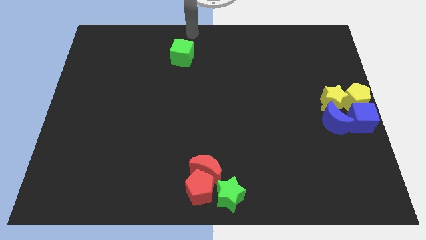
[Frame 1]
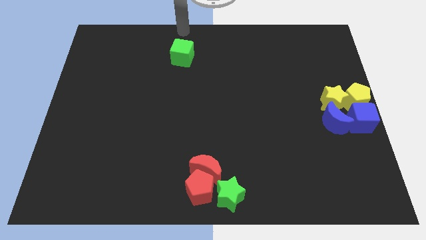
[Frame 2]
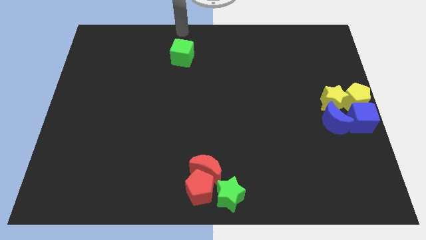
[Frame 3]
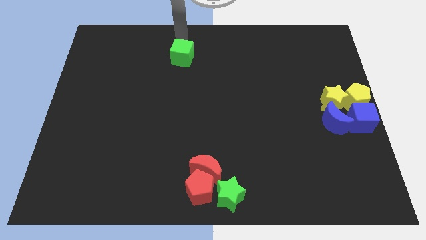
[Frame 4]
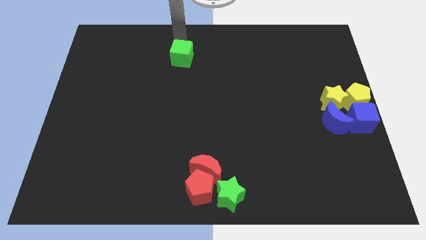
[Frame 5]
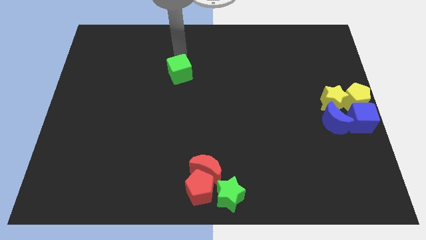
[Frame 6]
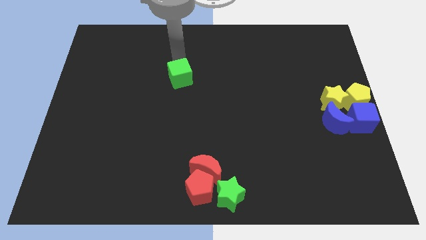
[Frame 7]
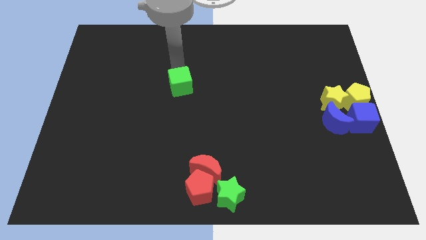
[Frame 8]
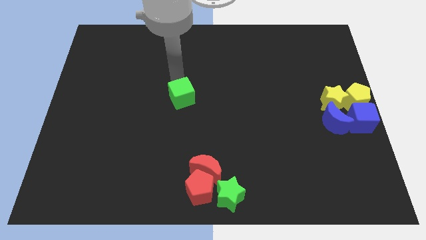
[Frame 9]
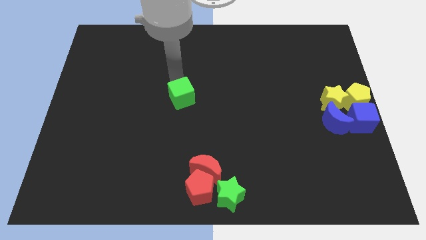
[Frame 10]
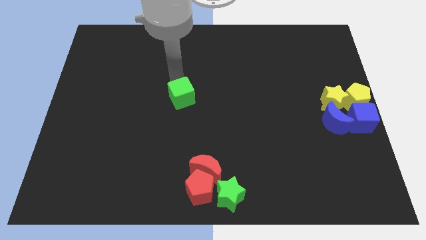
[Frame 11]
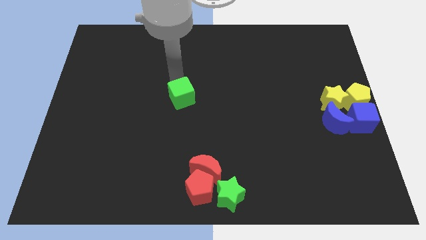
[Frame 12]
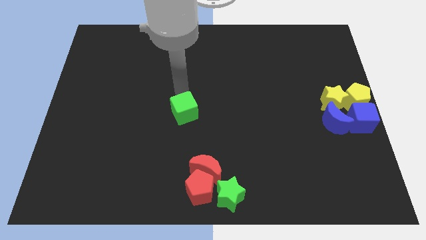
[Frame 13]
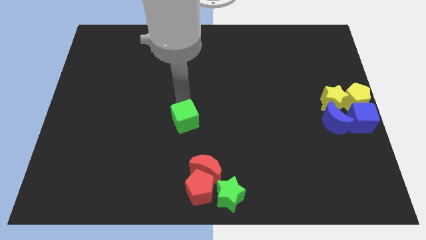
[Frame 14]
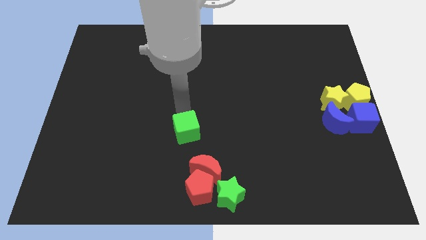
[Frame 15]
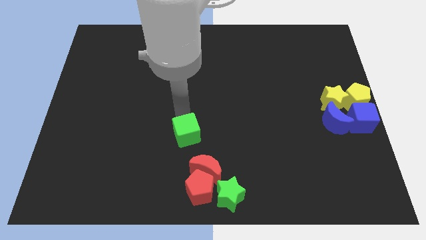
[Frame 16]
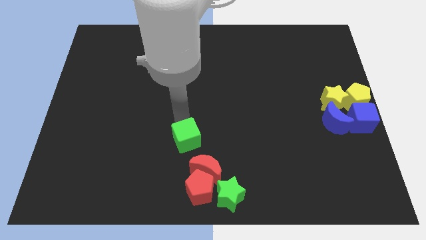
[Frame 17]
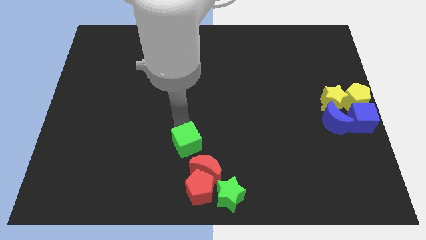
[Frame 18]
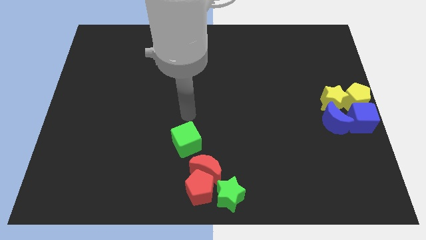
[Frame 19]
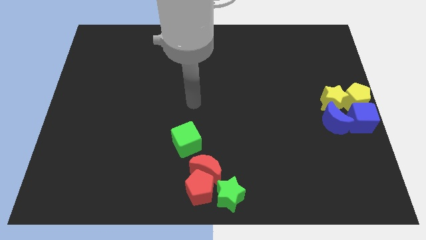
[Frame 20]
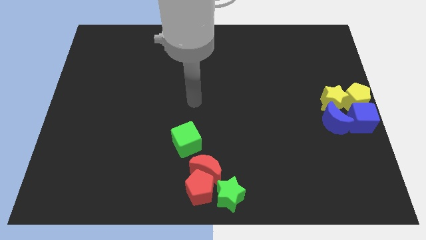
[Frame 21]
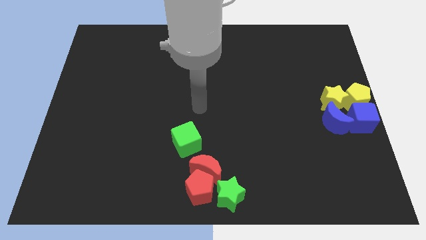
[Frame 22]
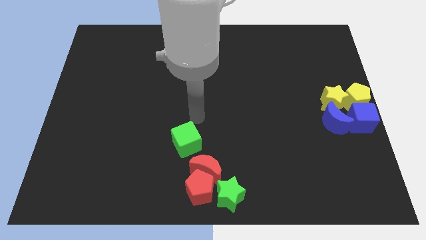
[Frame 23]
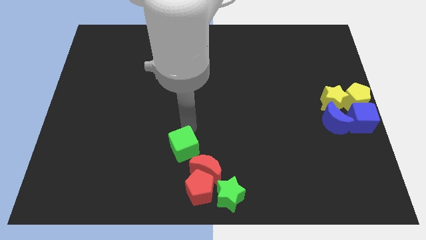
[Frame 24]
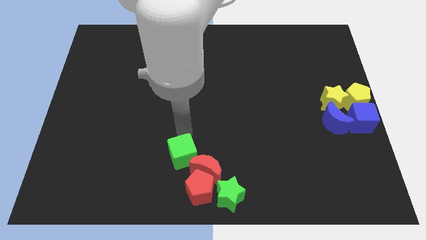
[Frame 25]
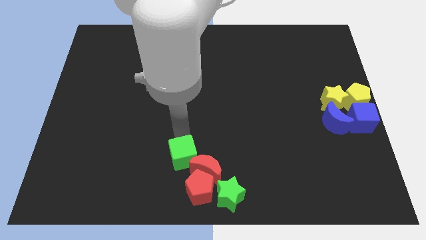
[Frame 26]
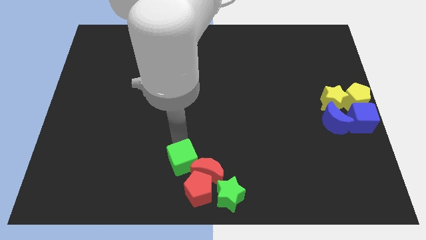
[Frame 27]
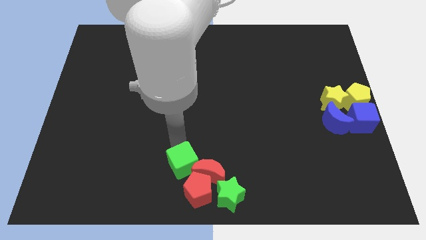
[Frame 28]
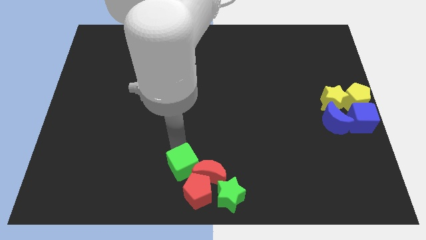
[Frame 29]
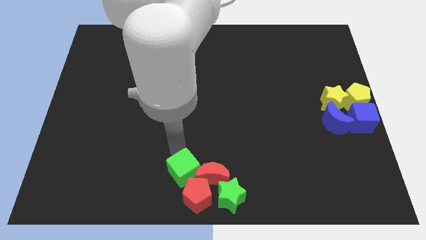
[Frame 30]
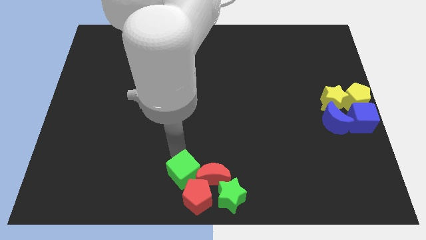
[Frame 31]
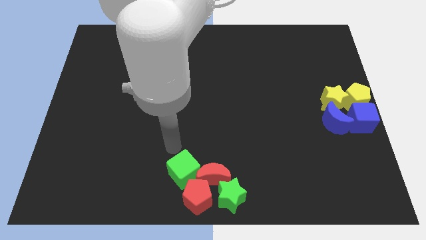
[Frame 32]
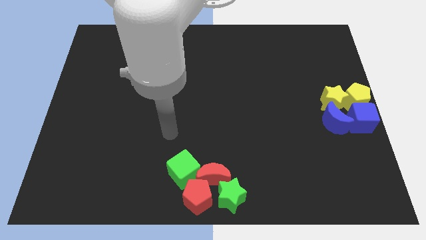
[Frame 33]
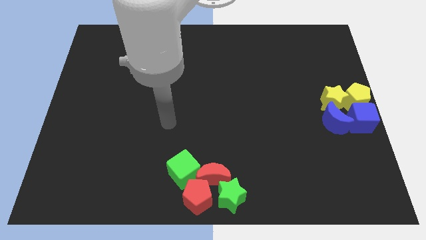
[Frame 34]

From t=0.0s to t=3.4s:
slide the green cube into the group of blocks at the bottom center of the board

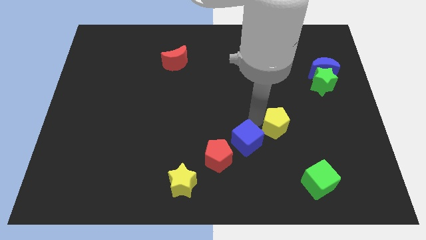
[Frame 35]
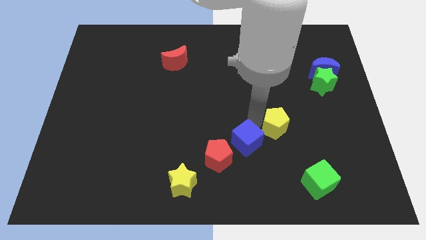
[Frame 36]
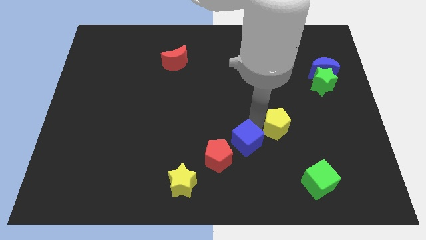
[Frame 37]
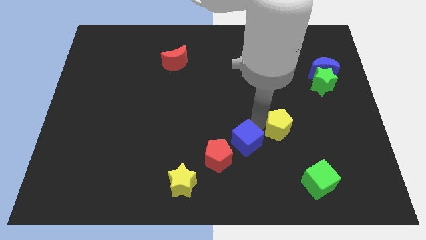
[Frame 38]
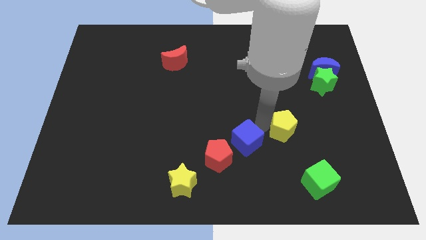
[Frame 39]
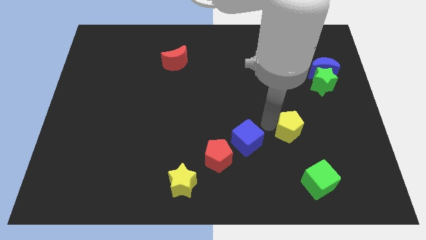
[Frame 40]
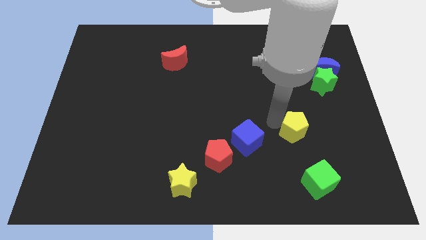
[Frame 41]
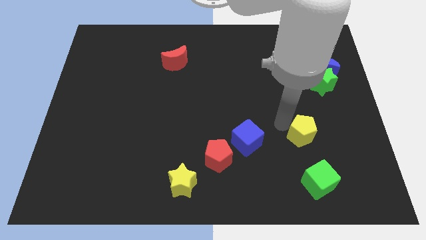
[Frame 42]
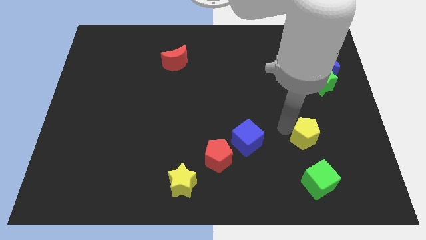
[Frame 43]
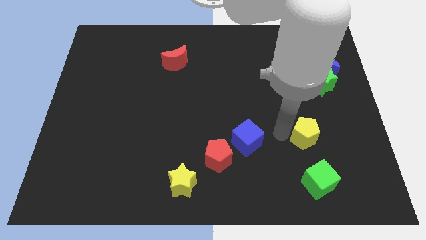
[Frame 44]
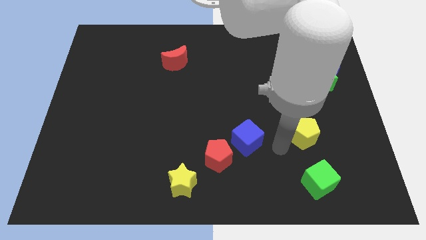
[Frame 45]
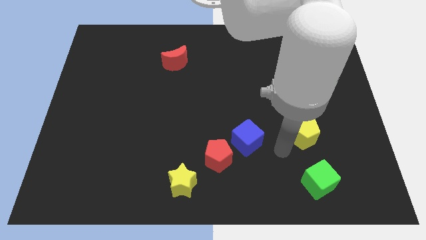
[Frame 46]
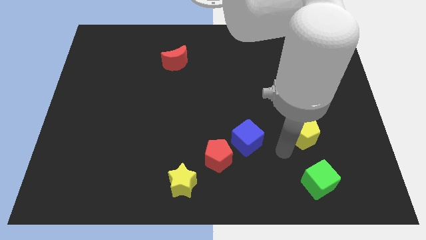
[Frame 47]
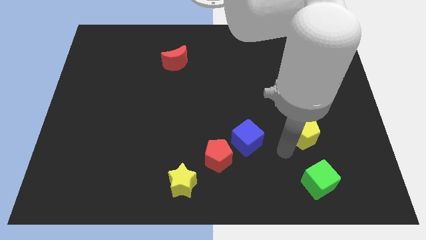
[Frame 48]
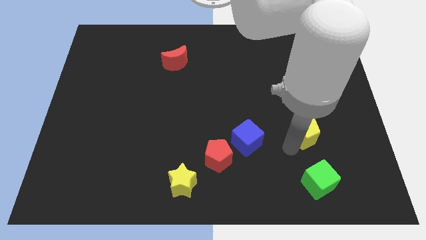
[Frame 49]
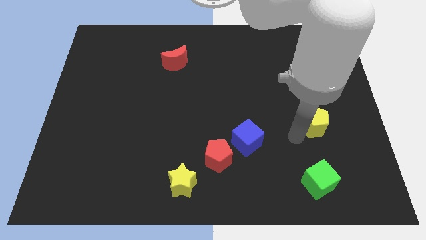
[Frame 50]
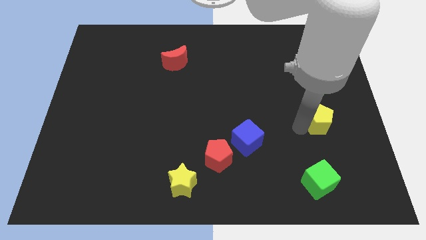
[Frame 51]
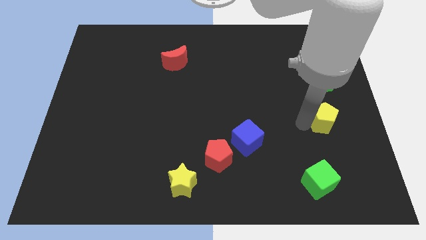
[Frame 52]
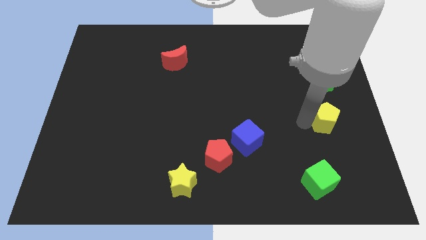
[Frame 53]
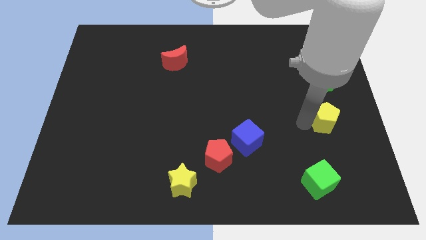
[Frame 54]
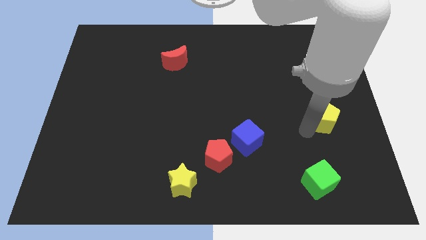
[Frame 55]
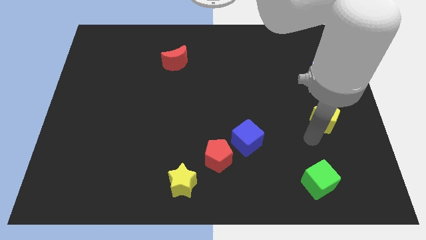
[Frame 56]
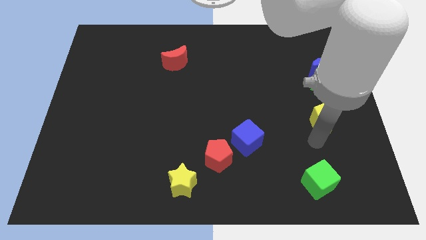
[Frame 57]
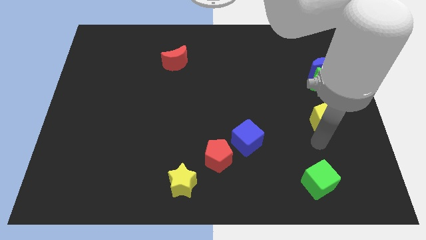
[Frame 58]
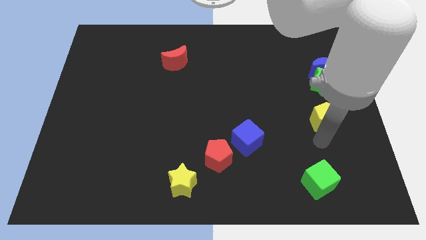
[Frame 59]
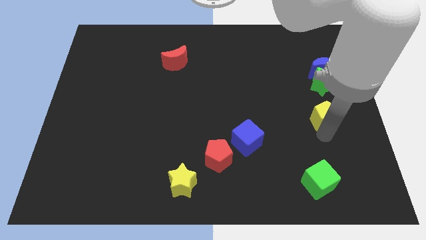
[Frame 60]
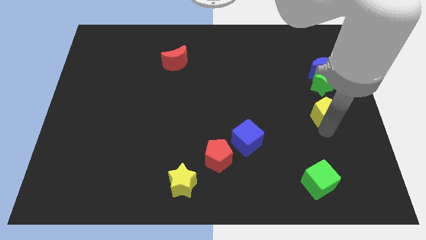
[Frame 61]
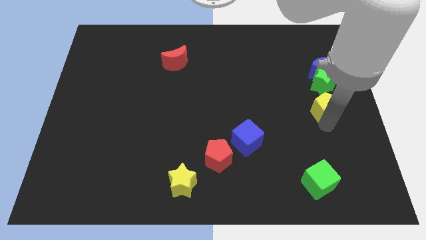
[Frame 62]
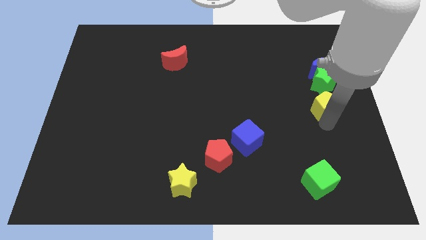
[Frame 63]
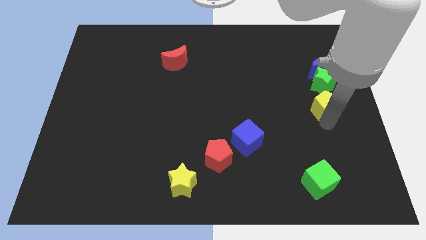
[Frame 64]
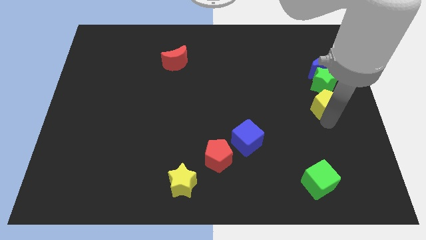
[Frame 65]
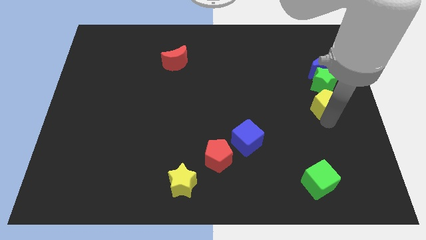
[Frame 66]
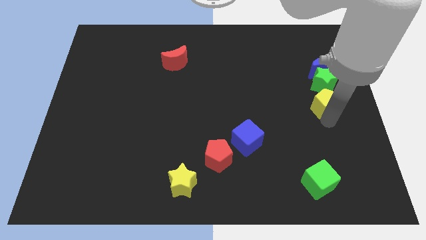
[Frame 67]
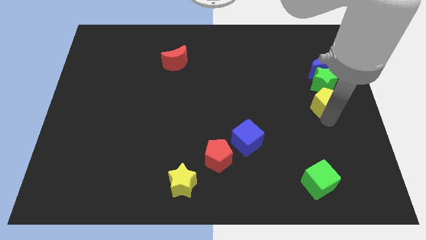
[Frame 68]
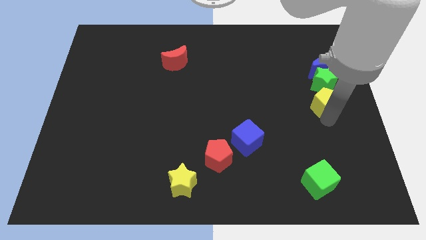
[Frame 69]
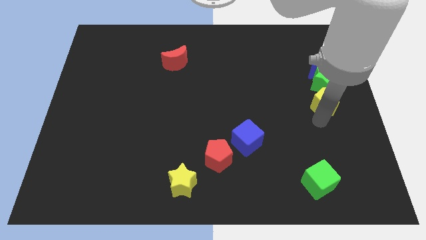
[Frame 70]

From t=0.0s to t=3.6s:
move the yellow pentagon below the green star

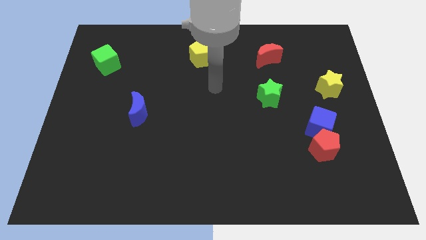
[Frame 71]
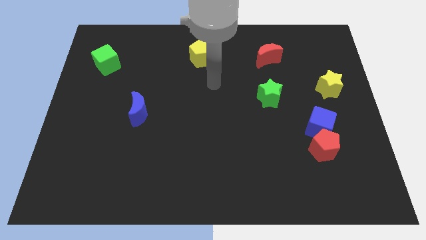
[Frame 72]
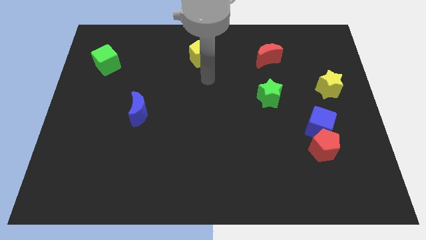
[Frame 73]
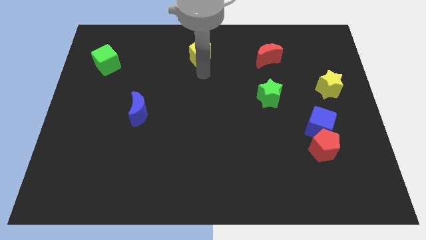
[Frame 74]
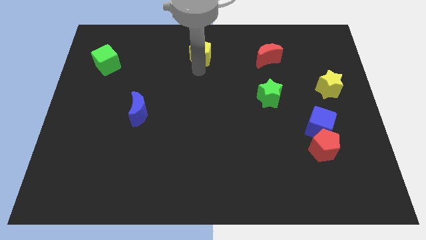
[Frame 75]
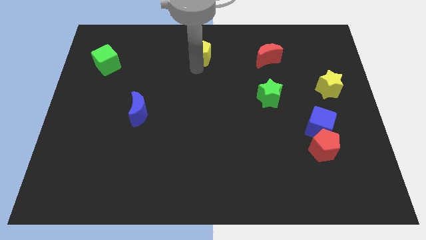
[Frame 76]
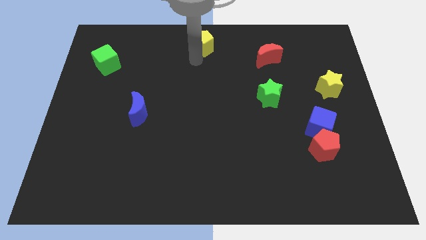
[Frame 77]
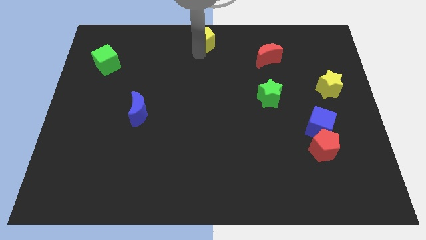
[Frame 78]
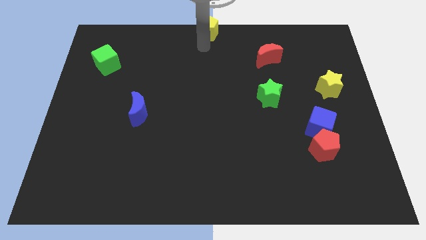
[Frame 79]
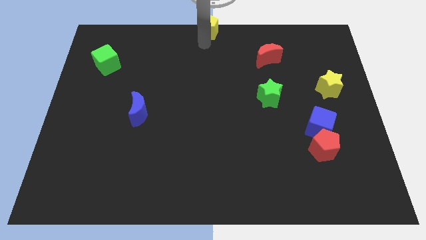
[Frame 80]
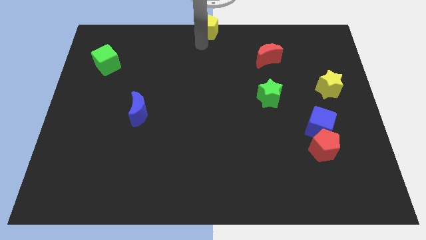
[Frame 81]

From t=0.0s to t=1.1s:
push the yellow pentagon to the top center of the board

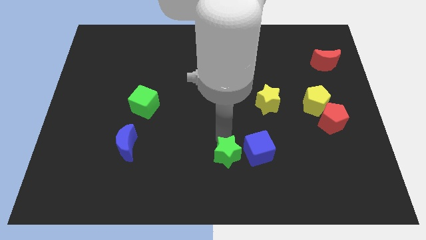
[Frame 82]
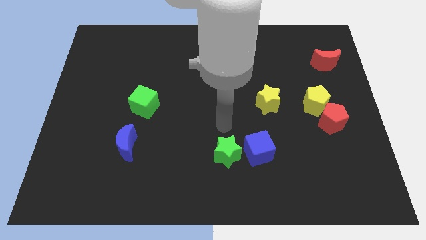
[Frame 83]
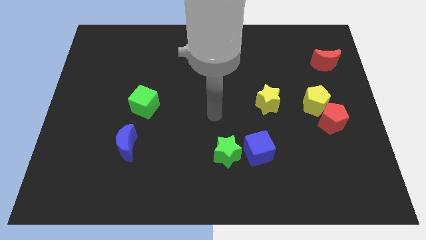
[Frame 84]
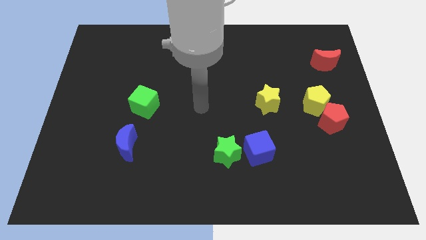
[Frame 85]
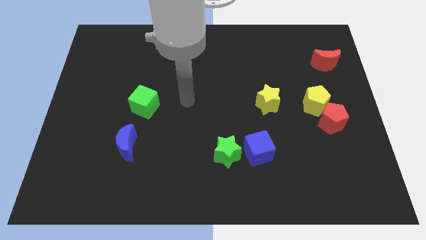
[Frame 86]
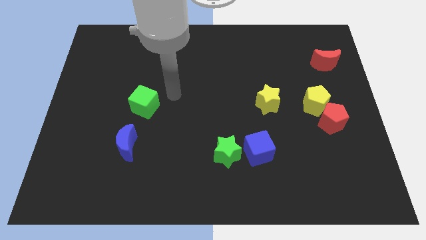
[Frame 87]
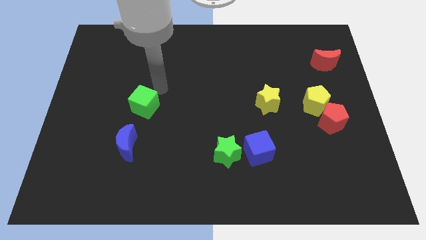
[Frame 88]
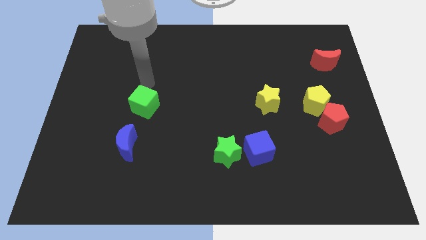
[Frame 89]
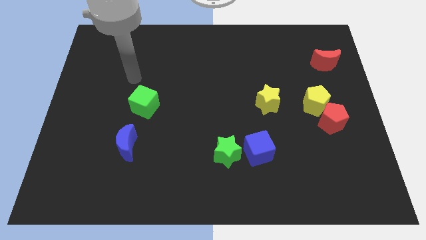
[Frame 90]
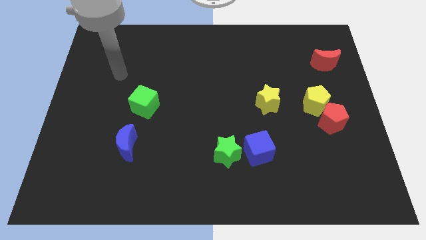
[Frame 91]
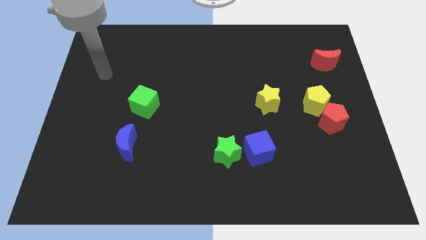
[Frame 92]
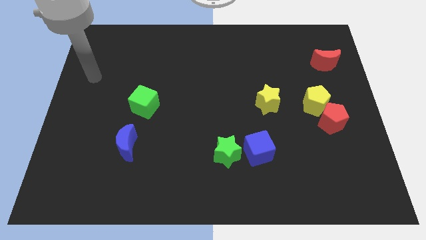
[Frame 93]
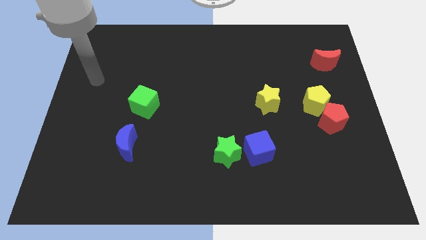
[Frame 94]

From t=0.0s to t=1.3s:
move the arm away from the green star
